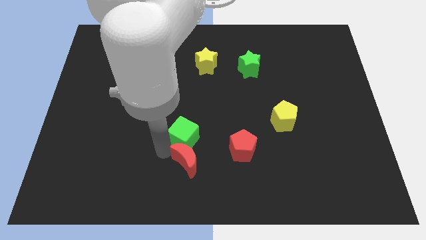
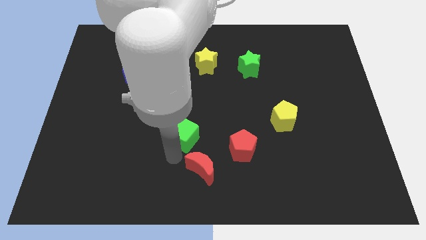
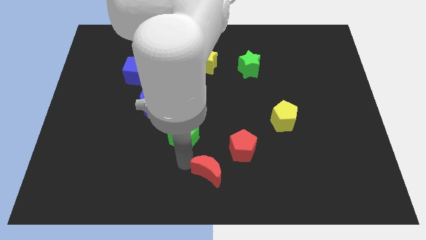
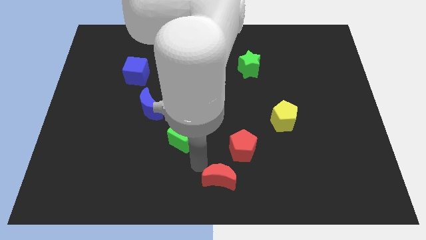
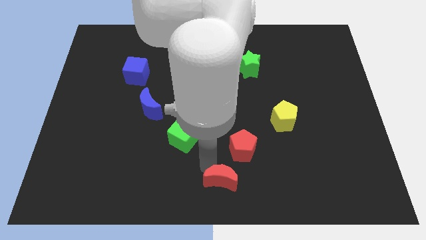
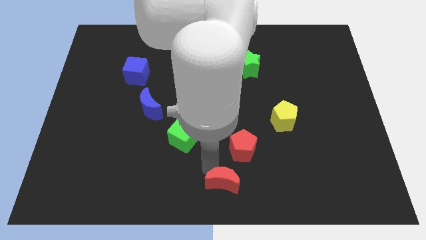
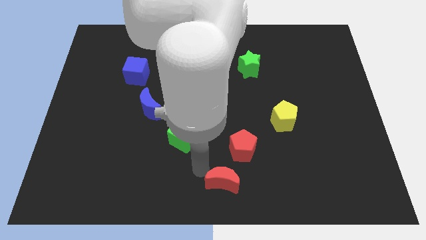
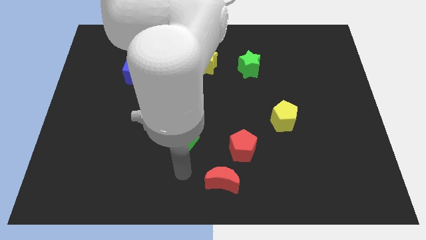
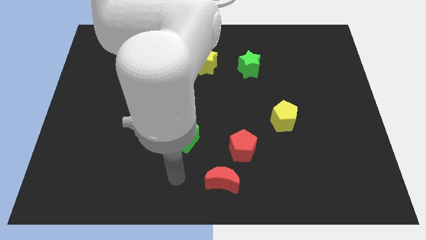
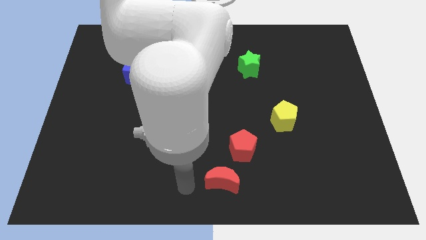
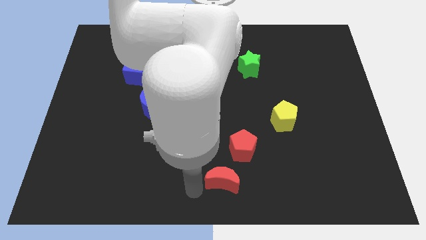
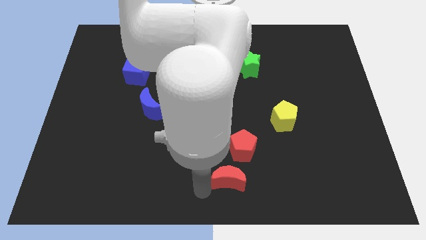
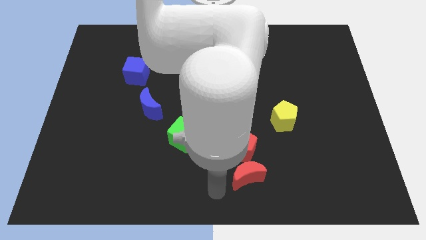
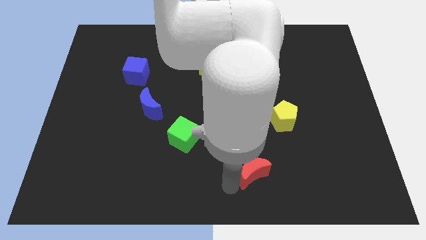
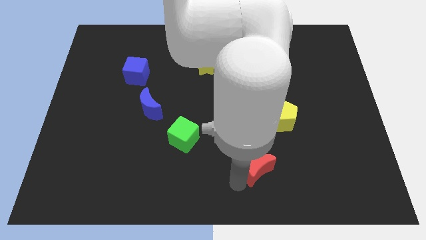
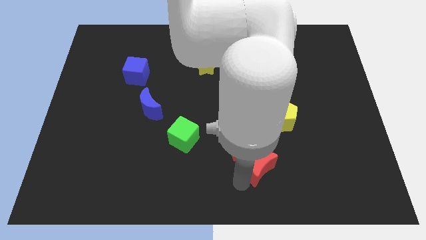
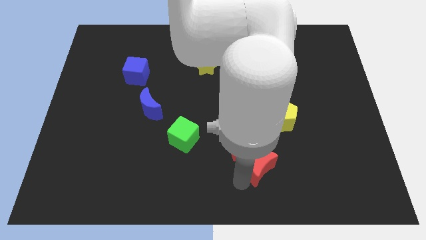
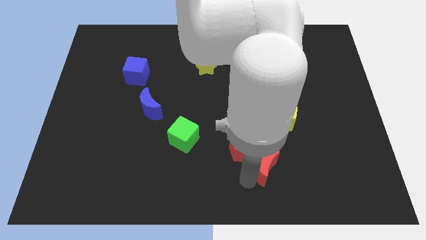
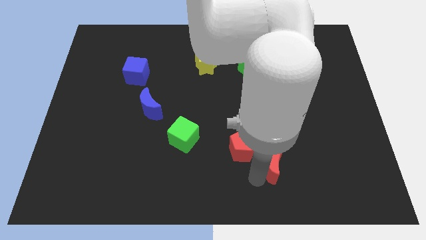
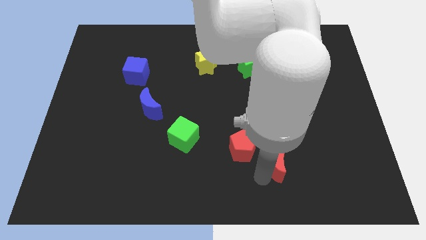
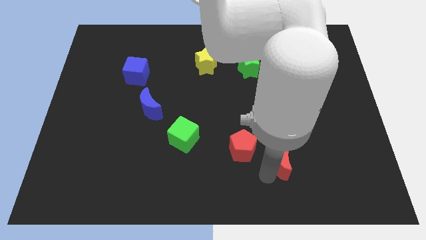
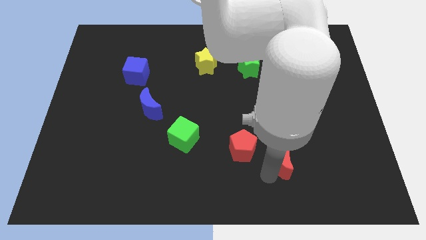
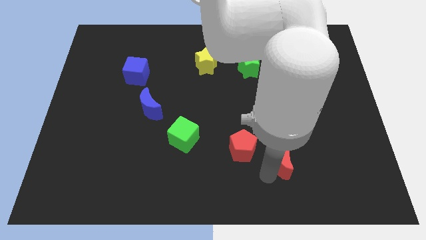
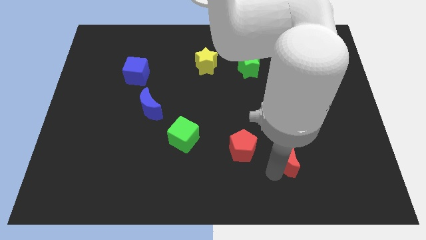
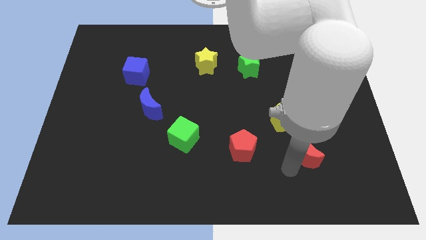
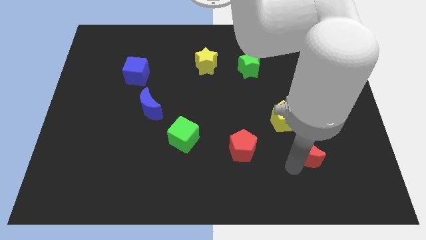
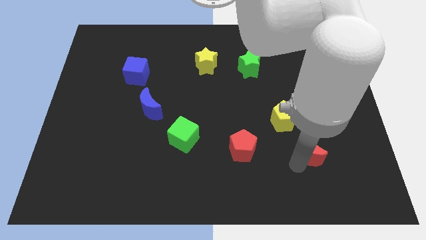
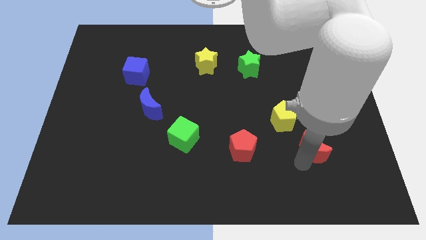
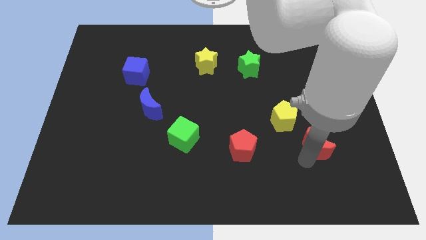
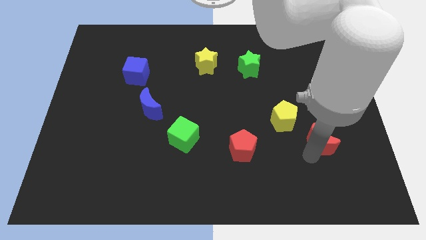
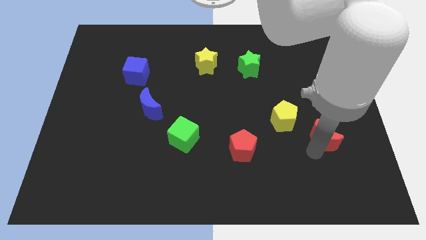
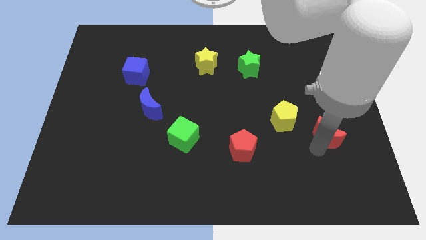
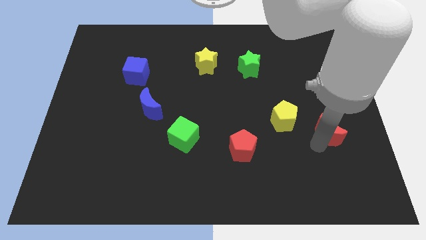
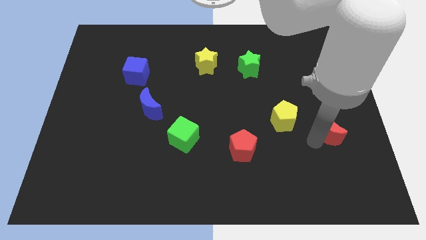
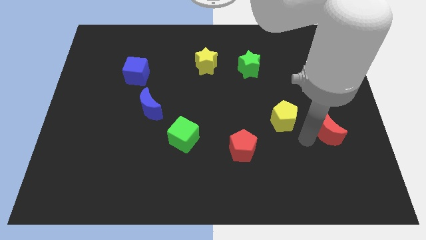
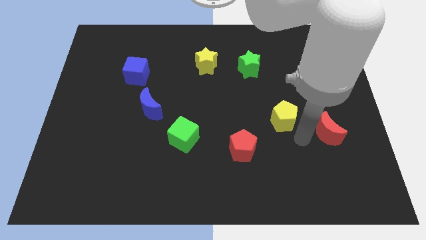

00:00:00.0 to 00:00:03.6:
push the red crescent to the right of the yellow pentagon

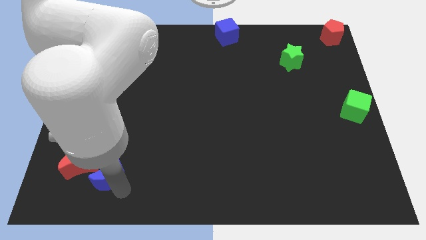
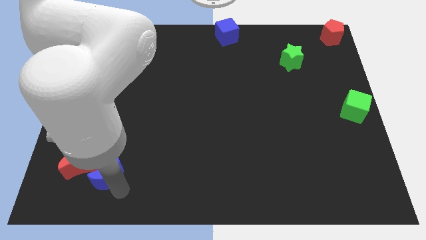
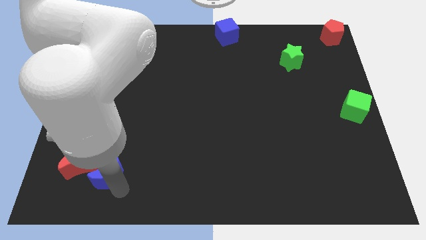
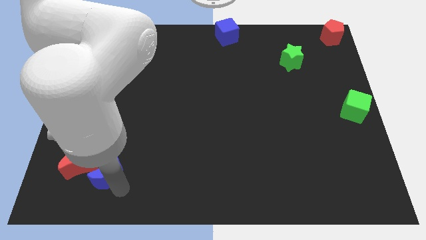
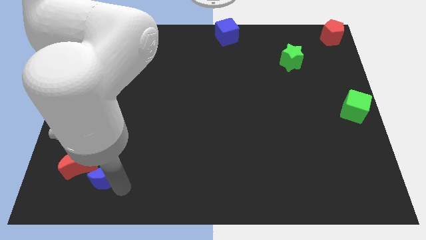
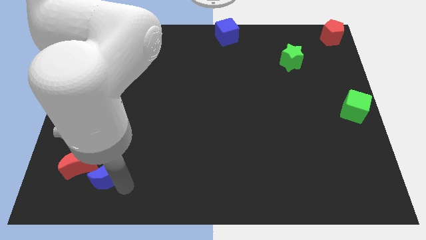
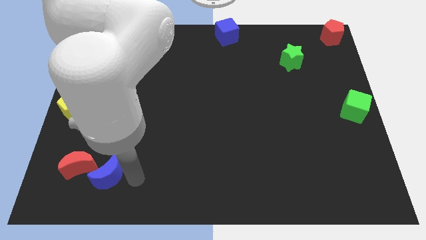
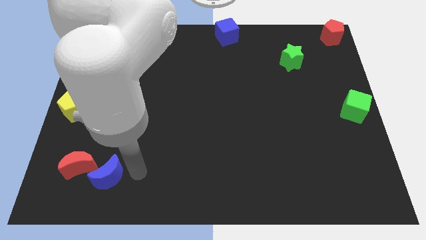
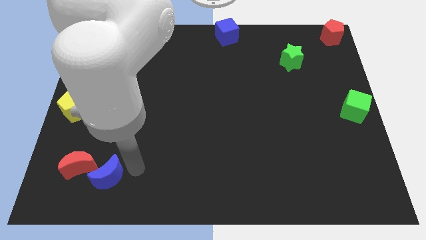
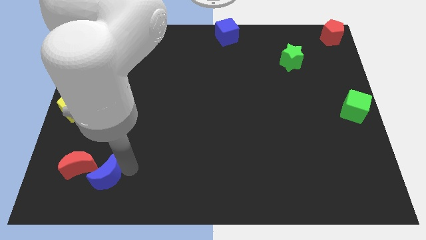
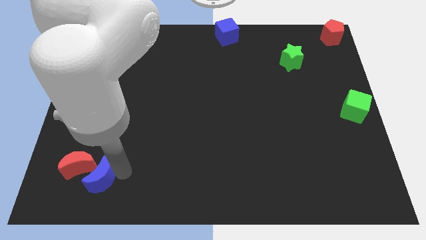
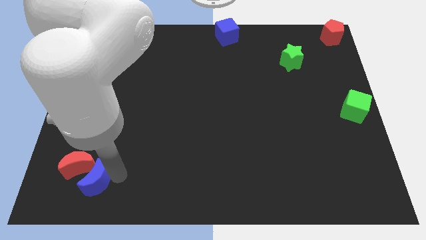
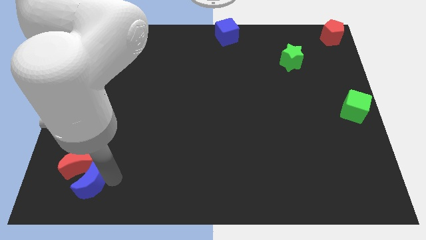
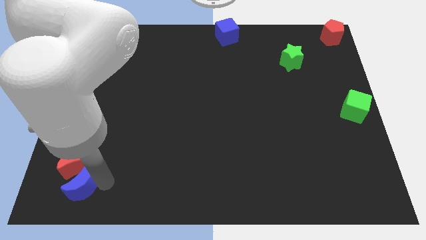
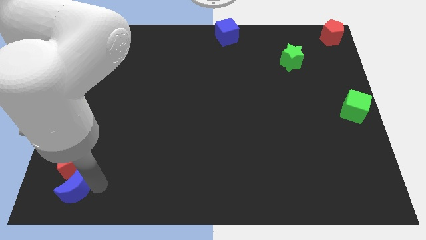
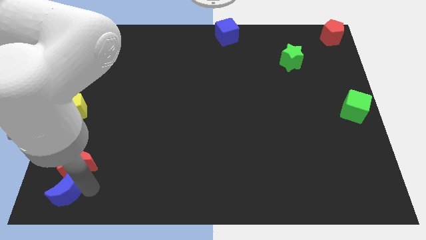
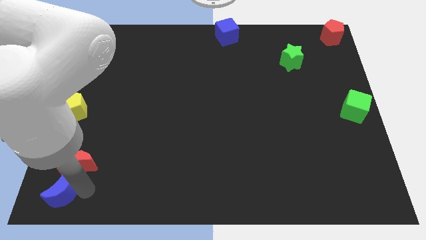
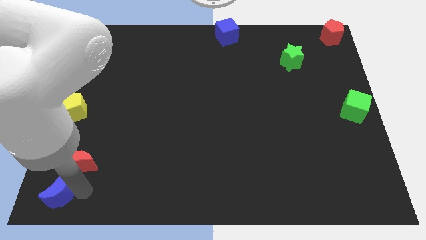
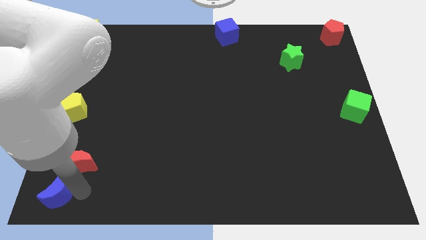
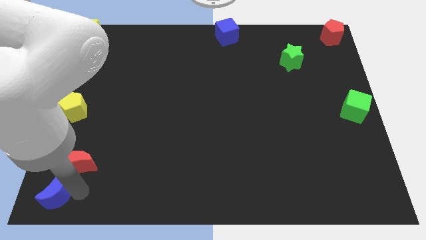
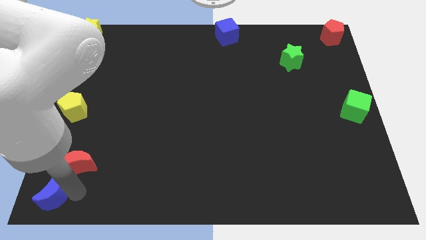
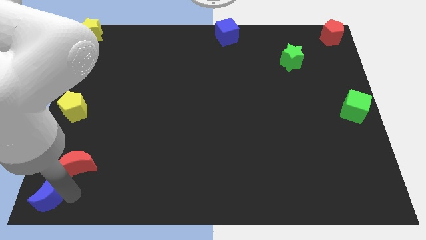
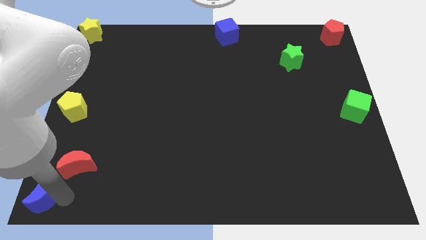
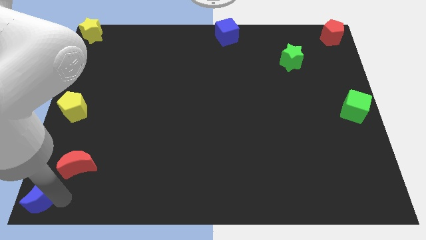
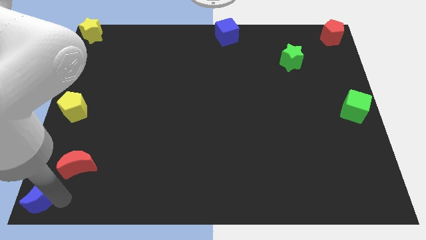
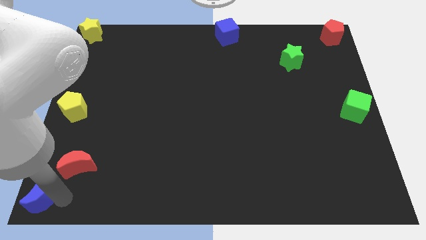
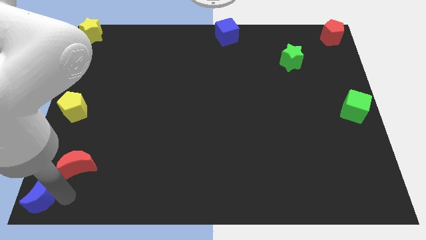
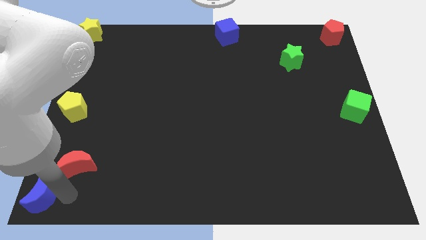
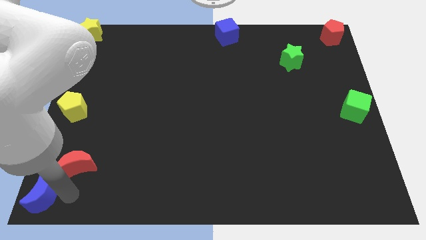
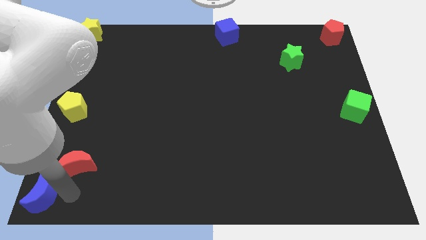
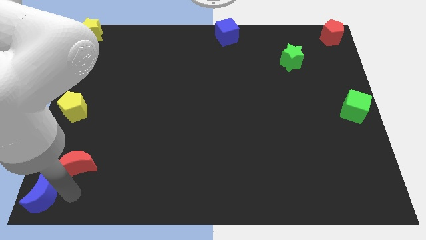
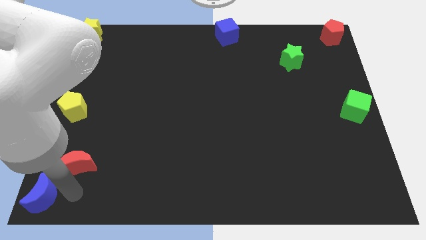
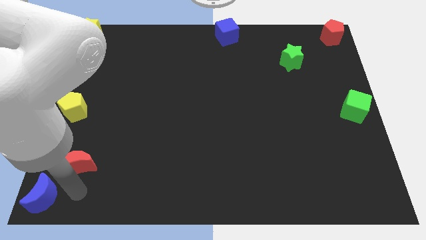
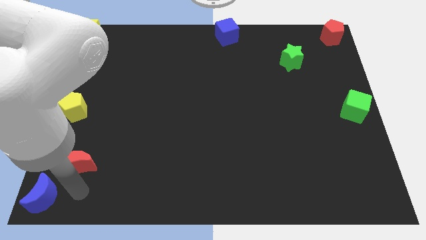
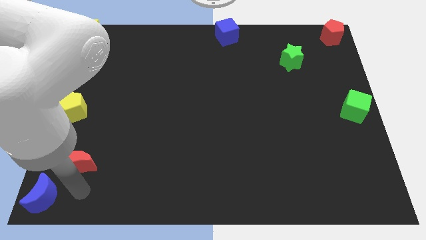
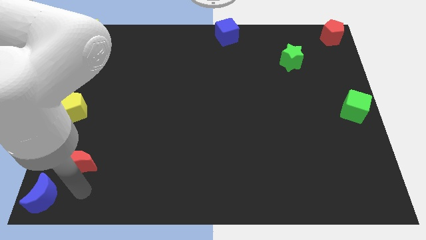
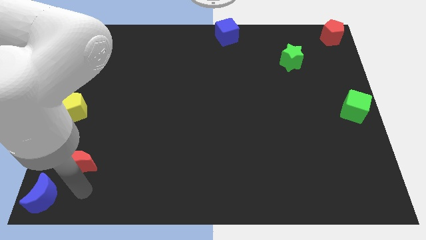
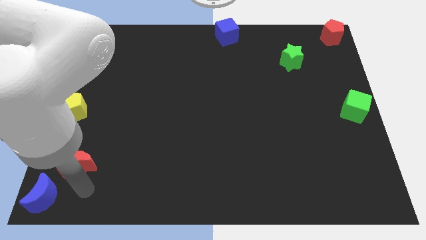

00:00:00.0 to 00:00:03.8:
place blue moon to the bottom left corner of the board

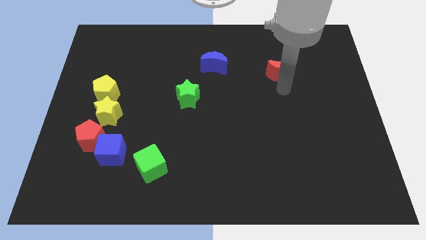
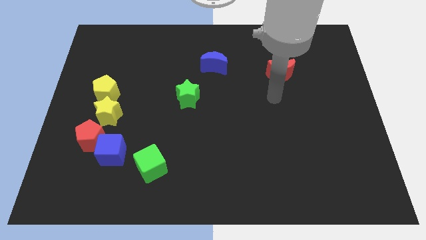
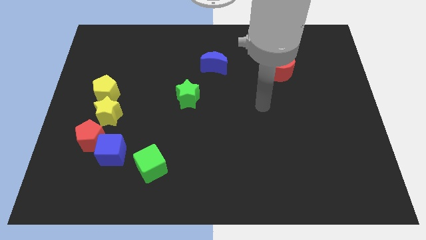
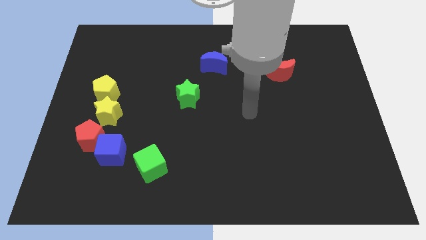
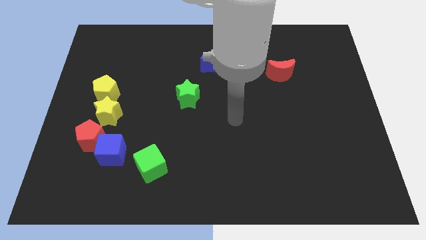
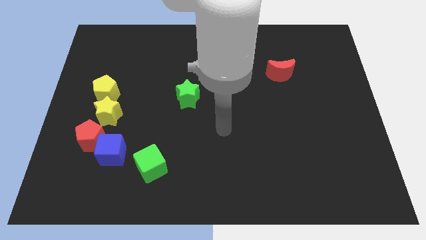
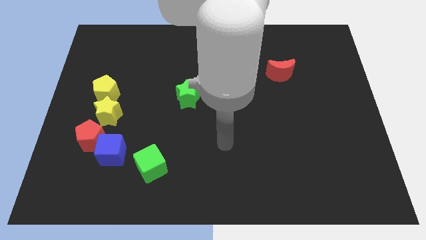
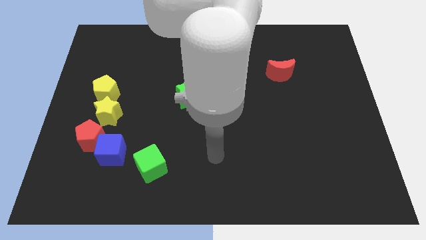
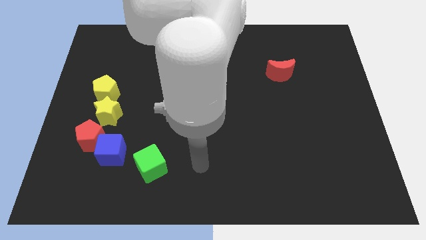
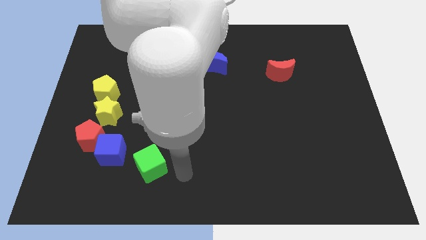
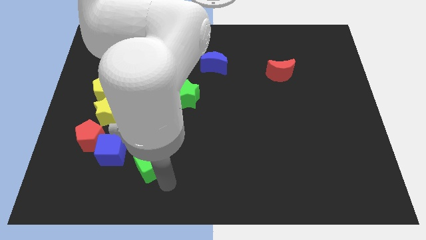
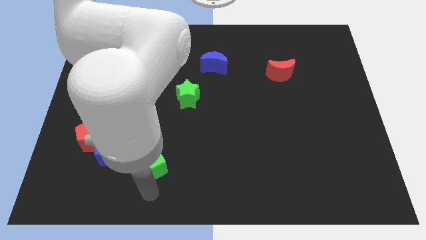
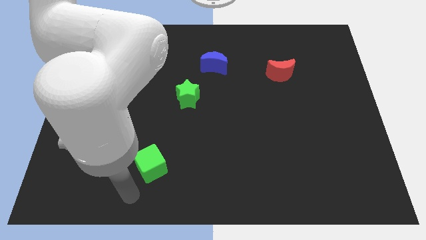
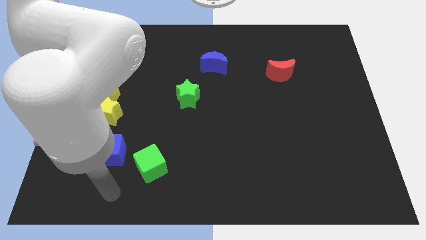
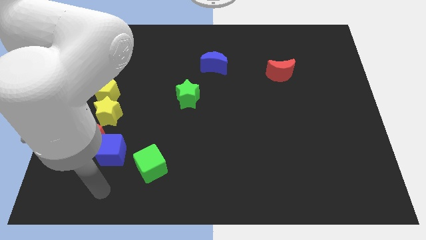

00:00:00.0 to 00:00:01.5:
place your hand from top to bottom left corner

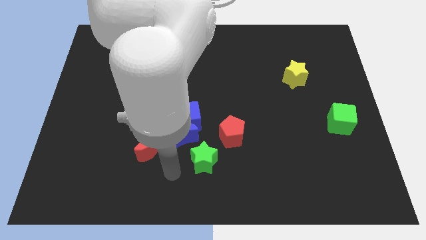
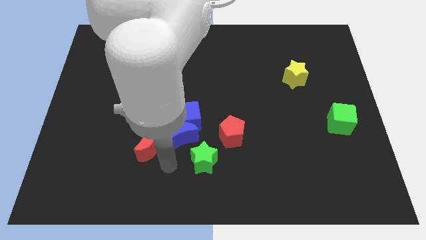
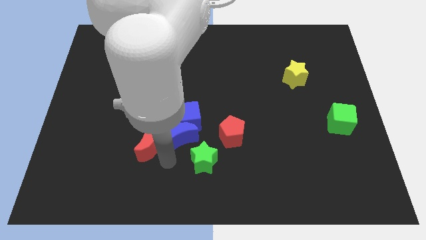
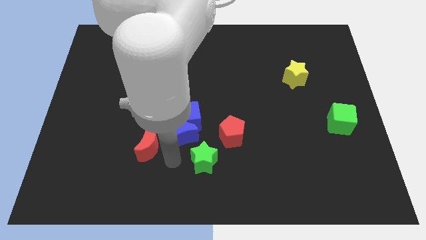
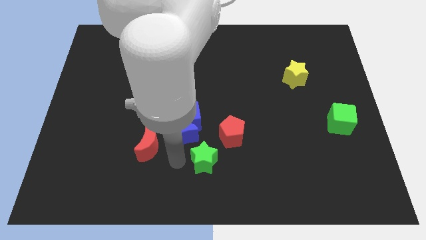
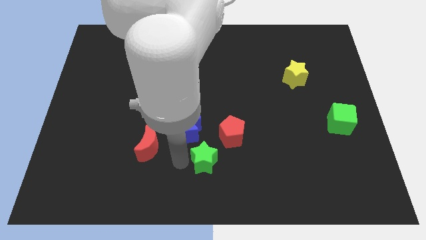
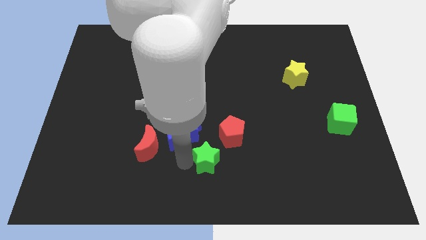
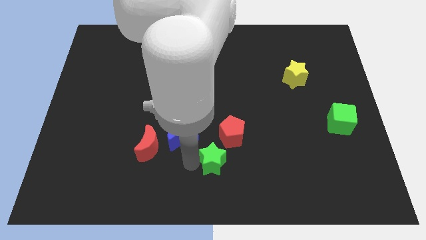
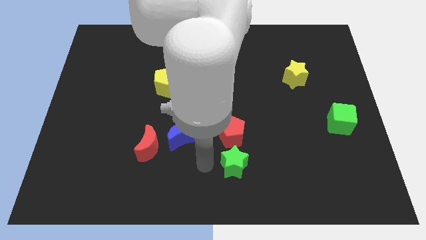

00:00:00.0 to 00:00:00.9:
place green star to the bottom of red pentagon
